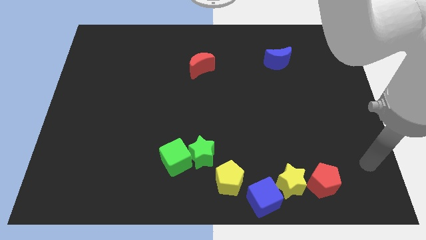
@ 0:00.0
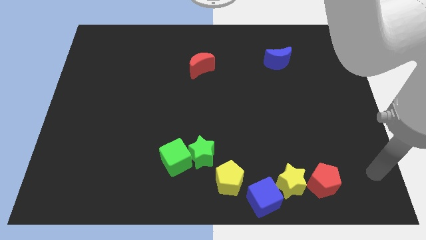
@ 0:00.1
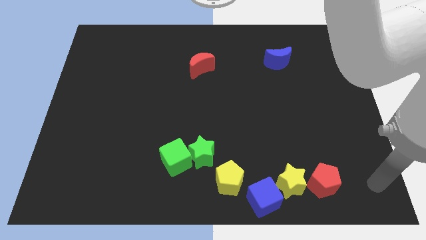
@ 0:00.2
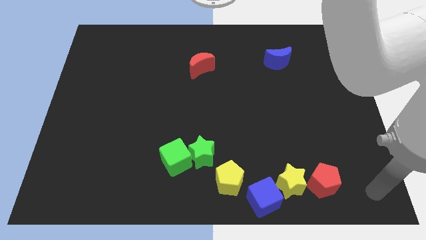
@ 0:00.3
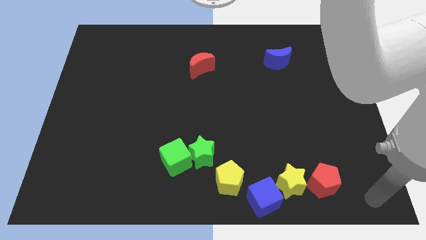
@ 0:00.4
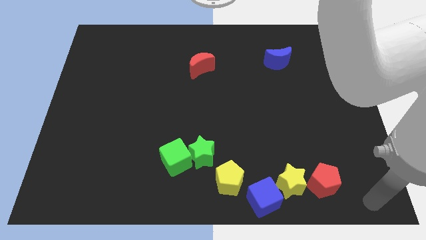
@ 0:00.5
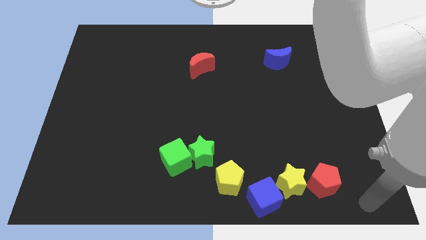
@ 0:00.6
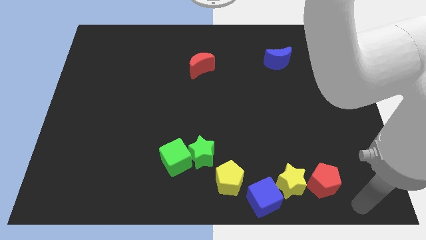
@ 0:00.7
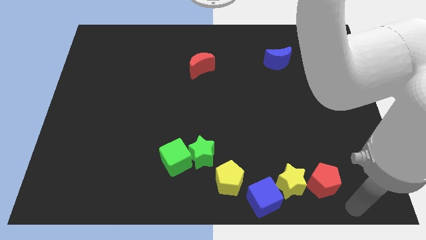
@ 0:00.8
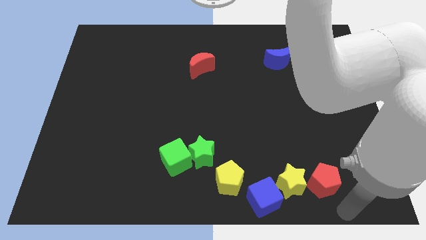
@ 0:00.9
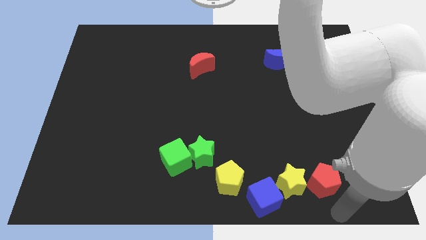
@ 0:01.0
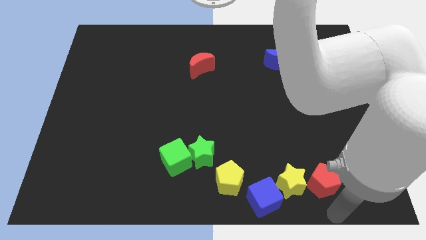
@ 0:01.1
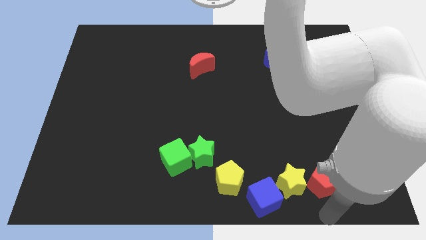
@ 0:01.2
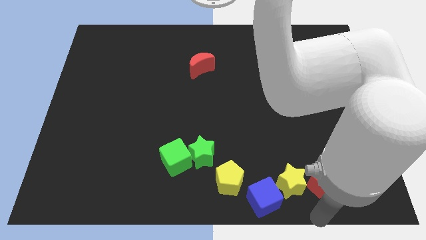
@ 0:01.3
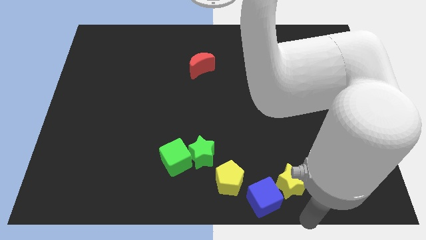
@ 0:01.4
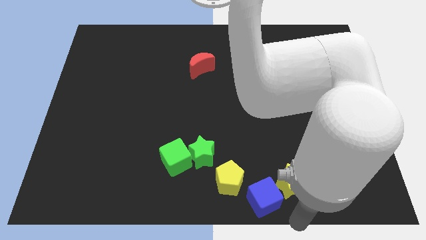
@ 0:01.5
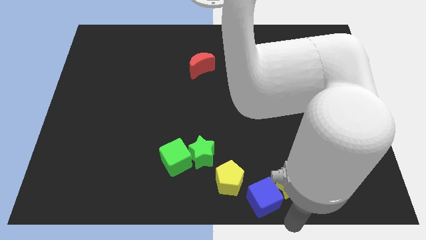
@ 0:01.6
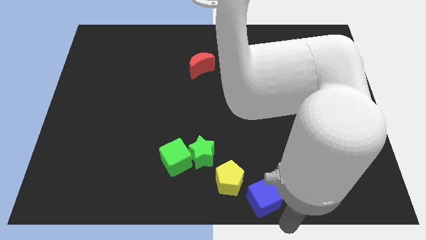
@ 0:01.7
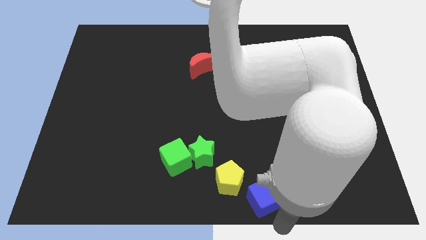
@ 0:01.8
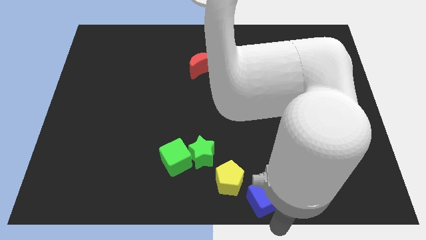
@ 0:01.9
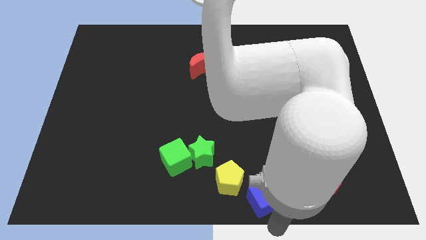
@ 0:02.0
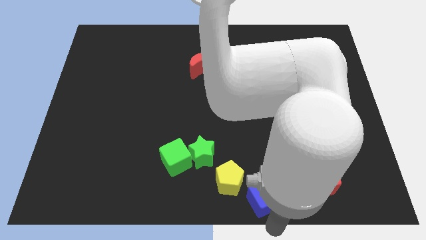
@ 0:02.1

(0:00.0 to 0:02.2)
place your arm at the bottom side of the blue cube

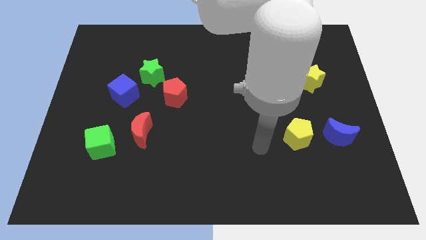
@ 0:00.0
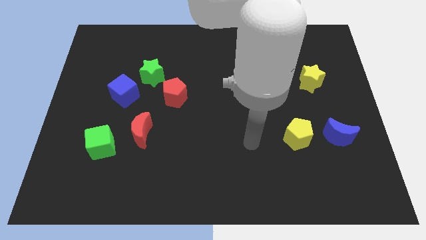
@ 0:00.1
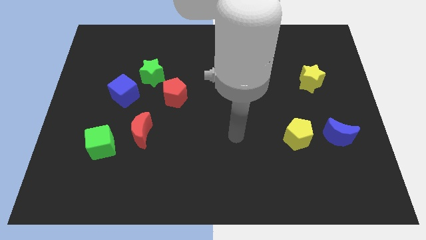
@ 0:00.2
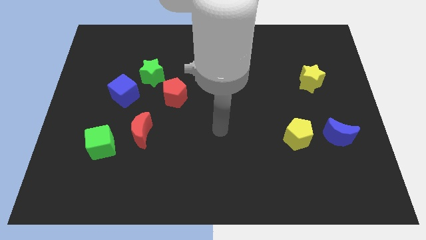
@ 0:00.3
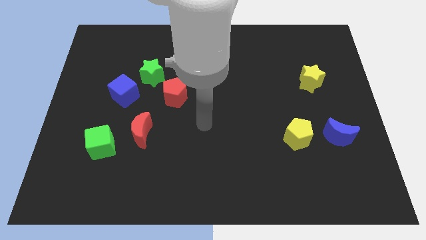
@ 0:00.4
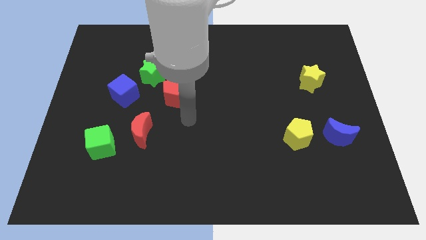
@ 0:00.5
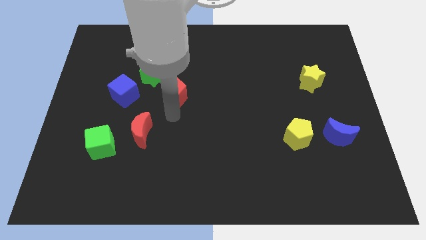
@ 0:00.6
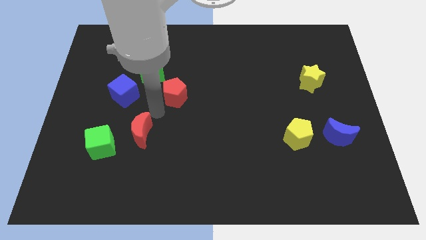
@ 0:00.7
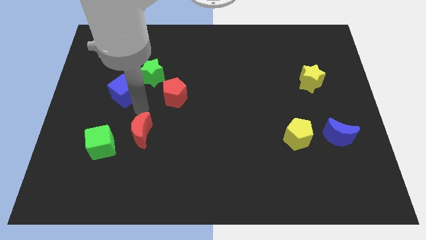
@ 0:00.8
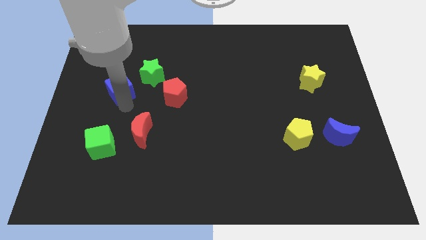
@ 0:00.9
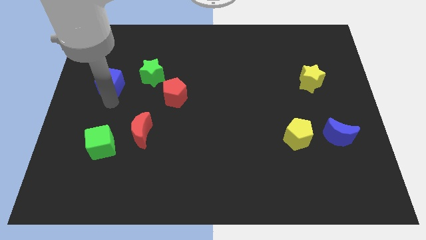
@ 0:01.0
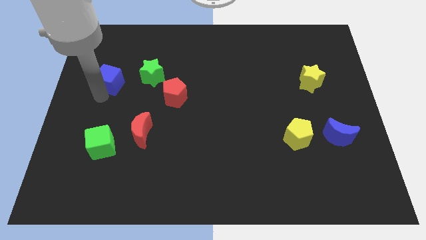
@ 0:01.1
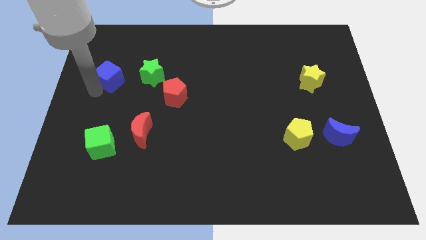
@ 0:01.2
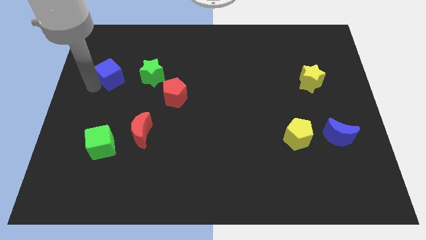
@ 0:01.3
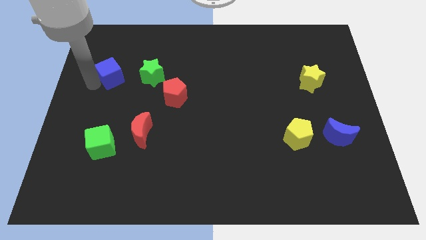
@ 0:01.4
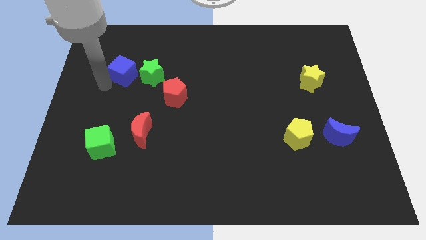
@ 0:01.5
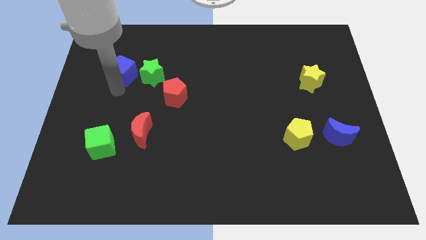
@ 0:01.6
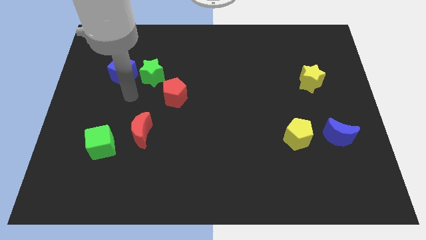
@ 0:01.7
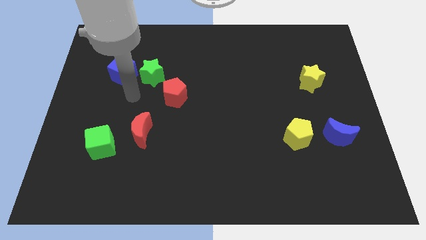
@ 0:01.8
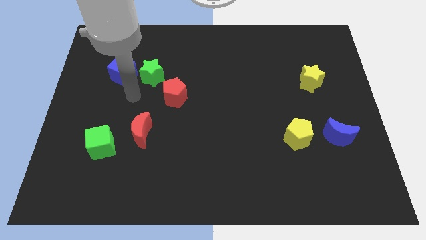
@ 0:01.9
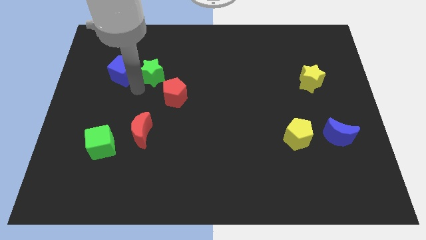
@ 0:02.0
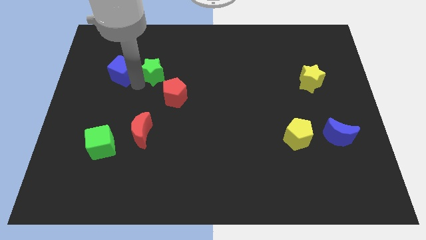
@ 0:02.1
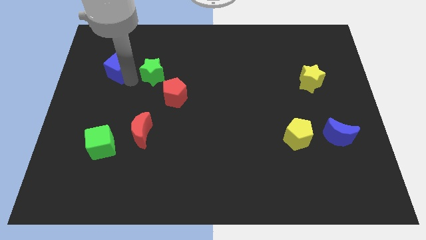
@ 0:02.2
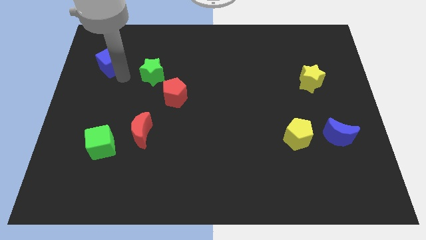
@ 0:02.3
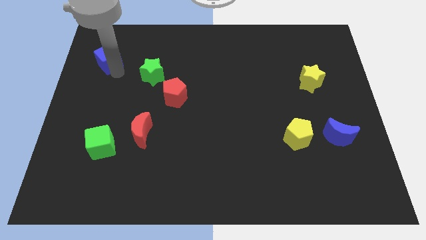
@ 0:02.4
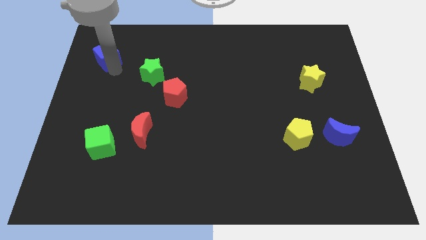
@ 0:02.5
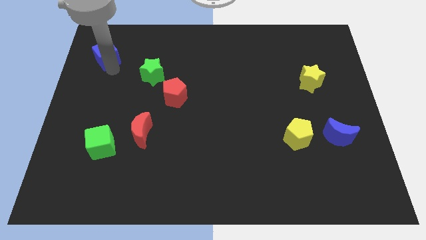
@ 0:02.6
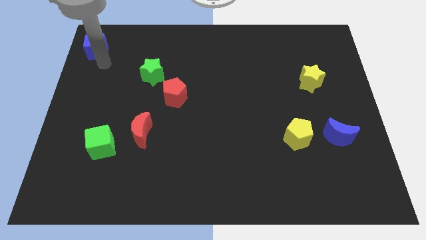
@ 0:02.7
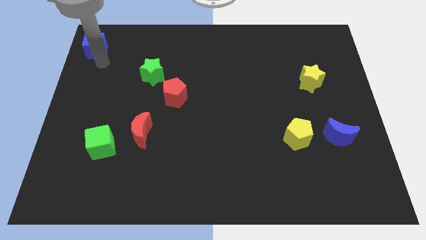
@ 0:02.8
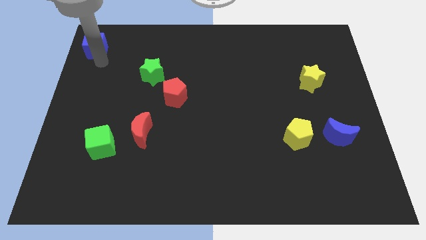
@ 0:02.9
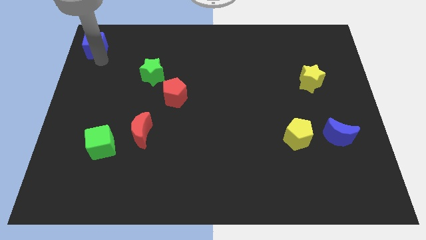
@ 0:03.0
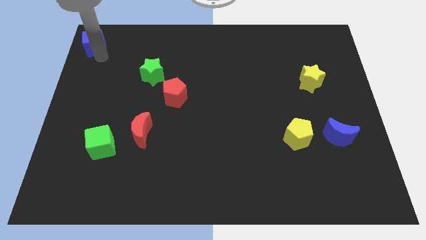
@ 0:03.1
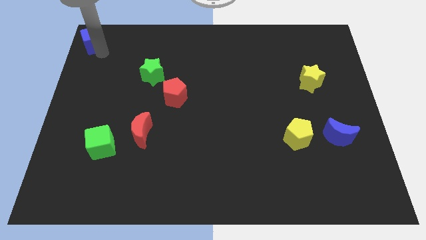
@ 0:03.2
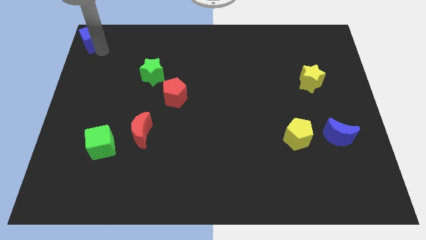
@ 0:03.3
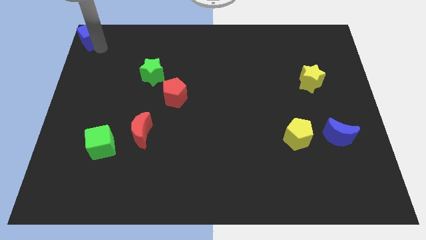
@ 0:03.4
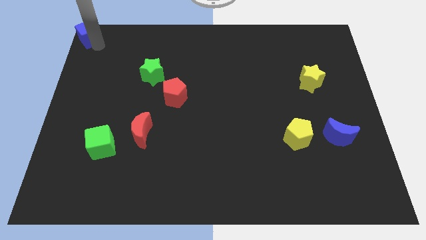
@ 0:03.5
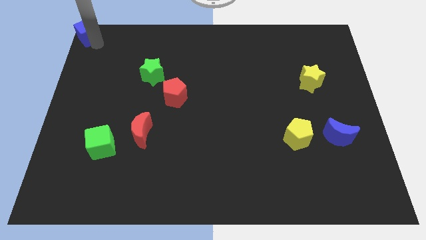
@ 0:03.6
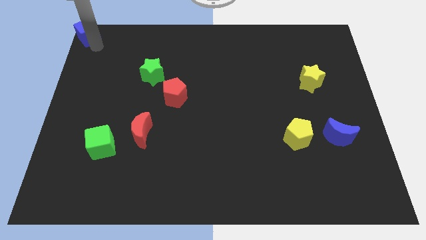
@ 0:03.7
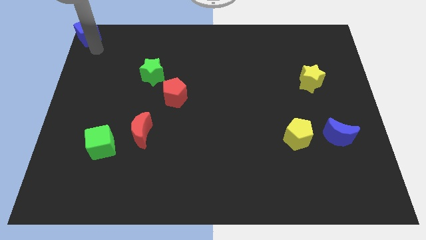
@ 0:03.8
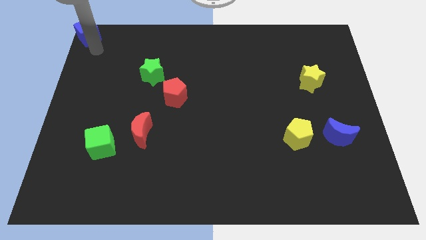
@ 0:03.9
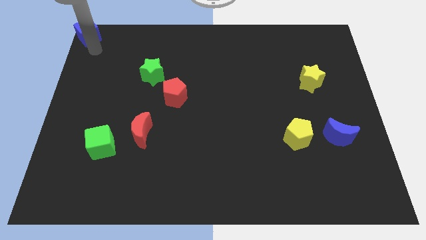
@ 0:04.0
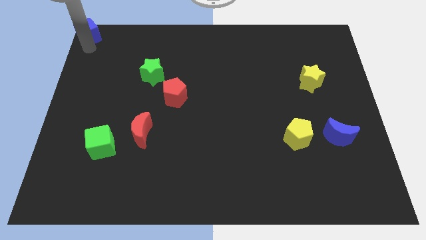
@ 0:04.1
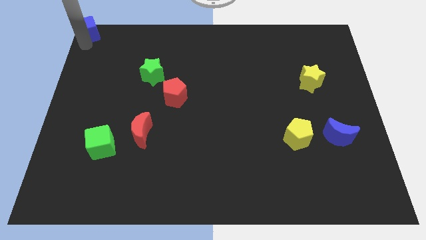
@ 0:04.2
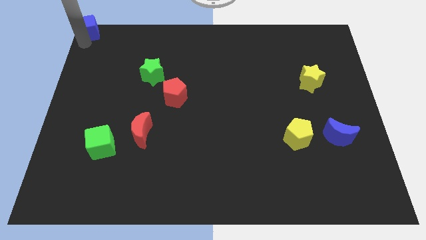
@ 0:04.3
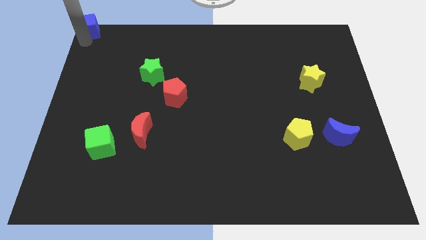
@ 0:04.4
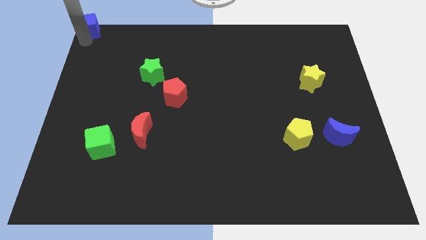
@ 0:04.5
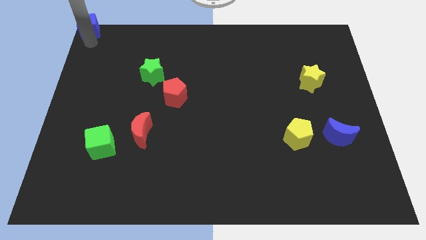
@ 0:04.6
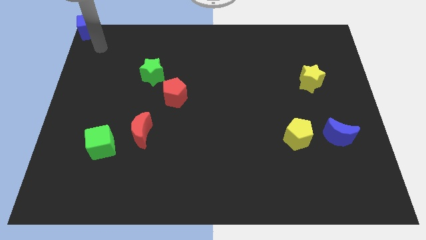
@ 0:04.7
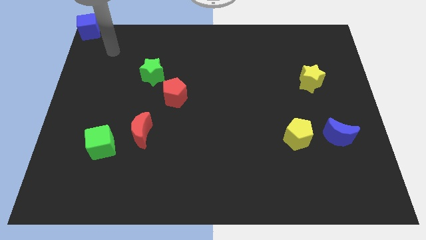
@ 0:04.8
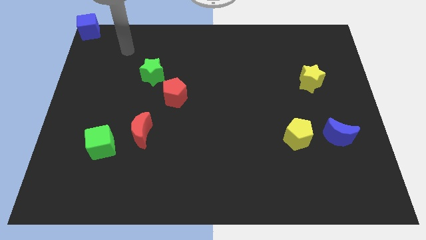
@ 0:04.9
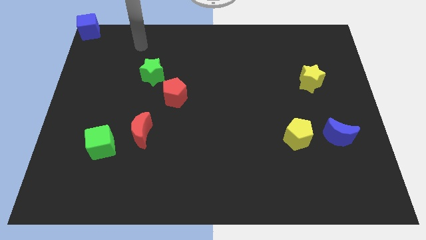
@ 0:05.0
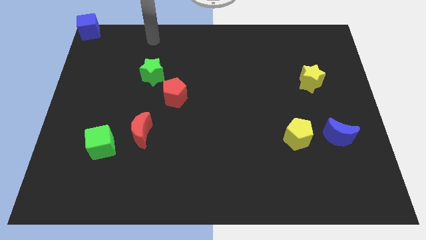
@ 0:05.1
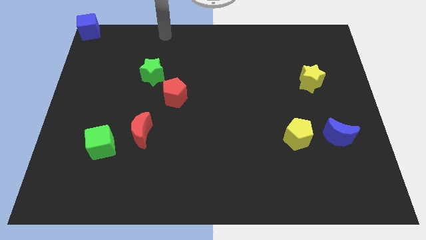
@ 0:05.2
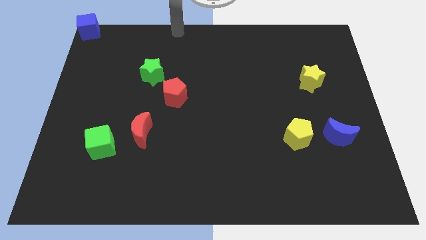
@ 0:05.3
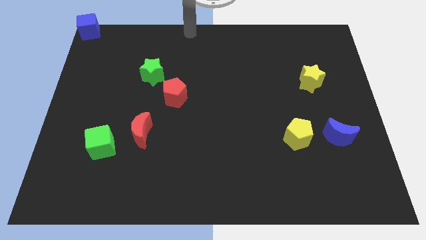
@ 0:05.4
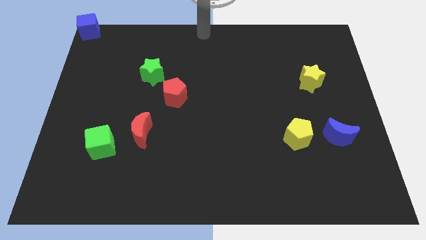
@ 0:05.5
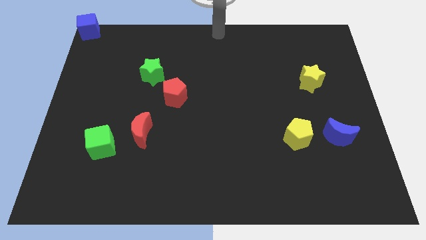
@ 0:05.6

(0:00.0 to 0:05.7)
push the blue cube towards the upper left corner of the board

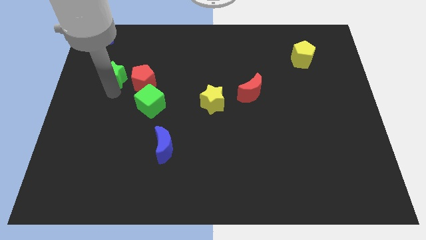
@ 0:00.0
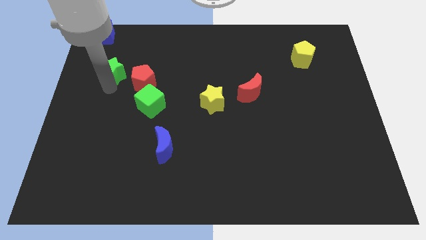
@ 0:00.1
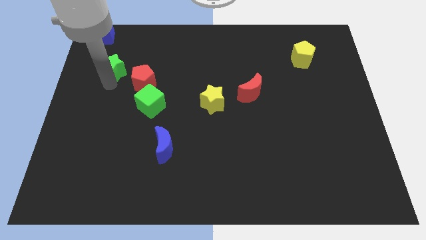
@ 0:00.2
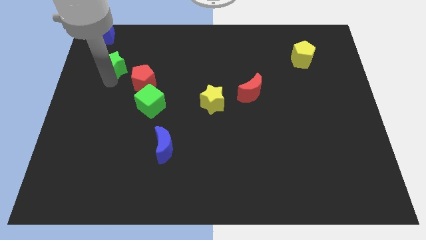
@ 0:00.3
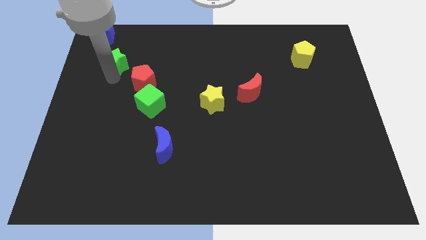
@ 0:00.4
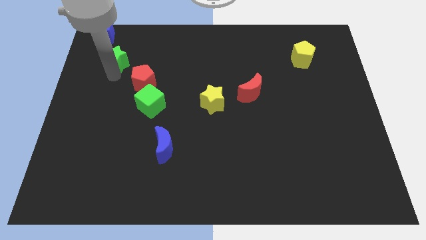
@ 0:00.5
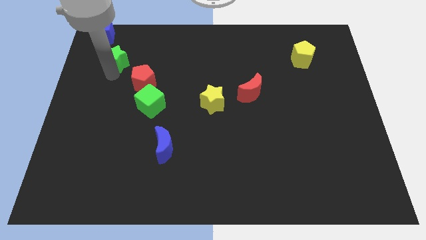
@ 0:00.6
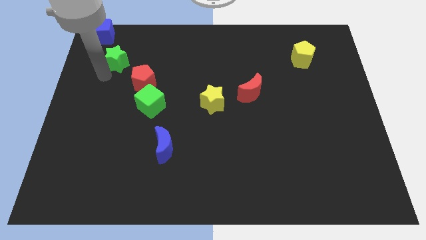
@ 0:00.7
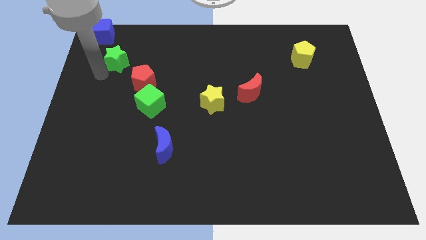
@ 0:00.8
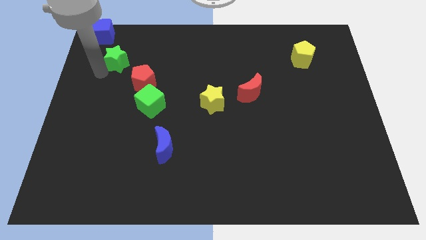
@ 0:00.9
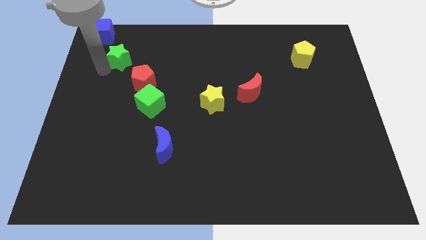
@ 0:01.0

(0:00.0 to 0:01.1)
move green star towards blue cube
